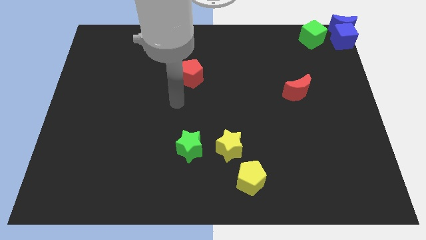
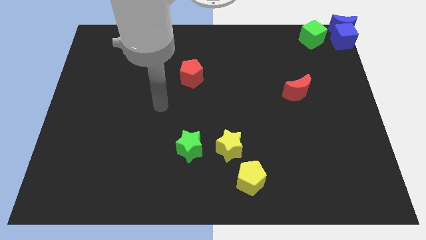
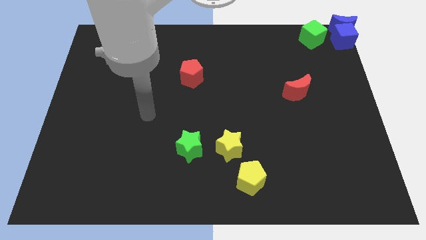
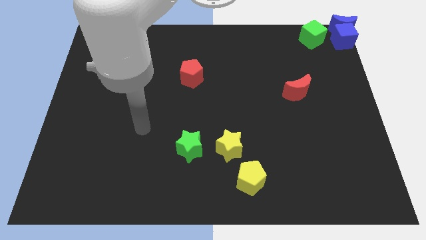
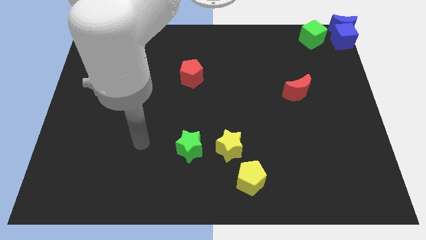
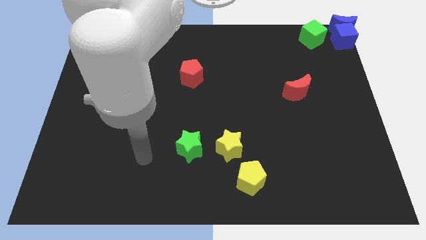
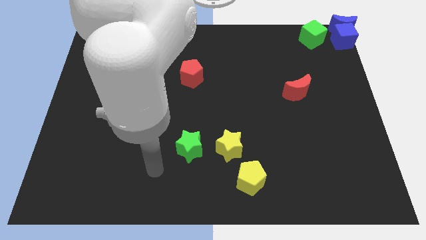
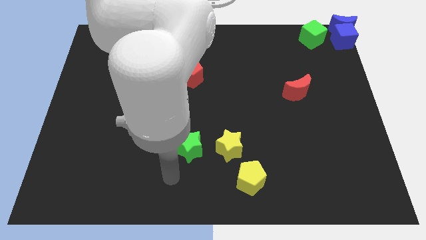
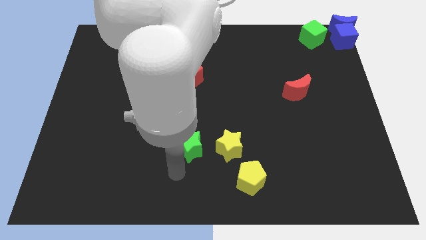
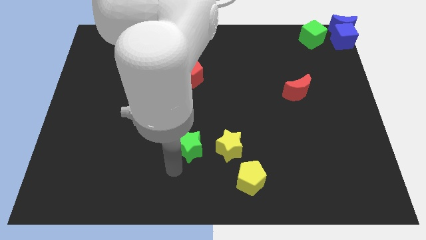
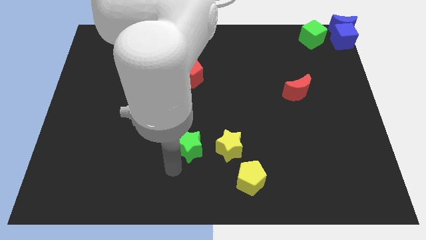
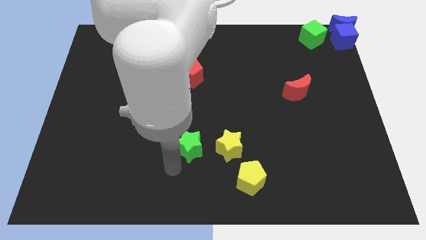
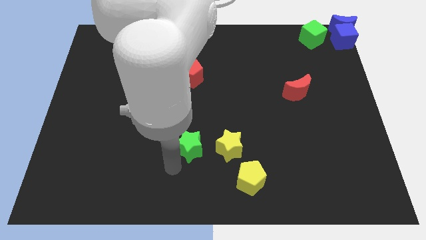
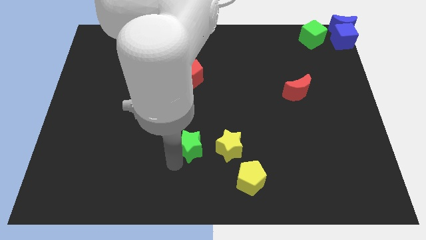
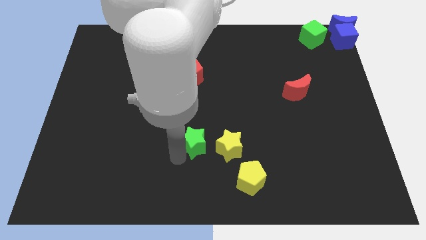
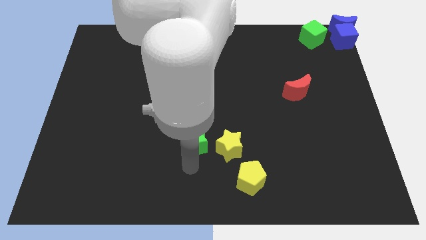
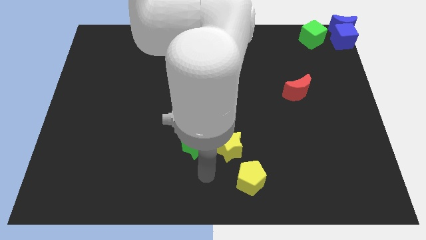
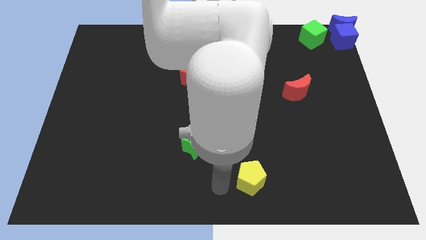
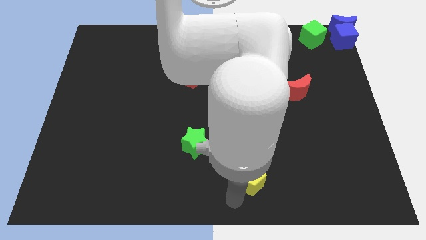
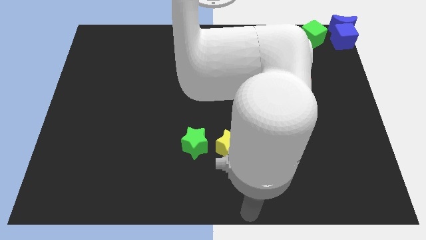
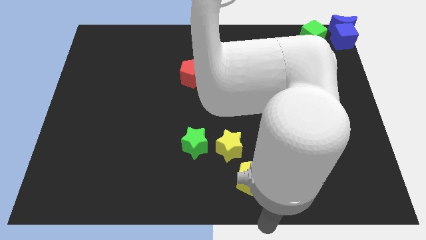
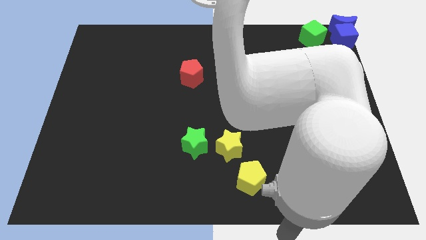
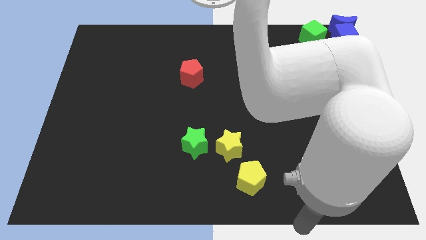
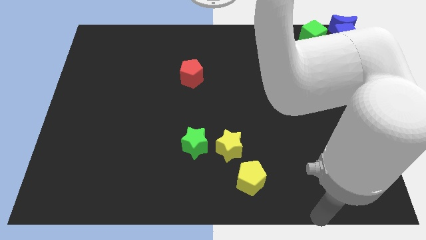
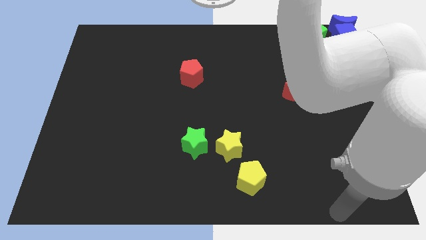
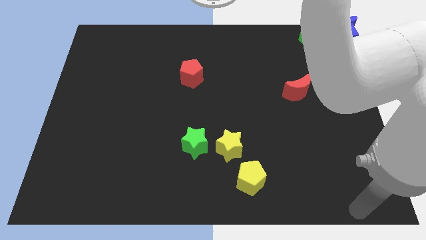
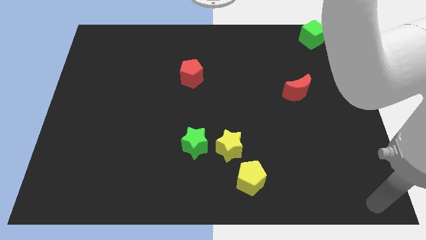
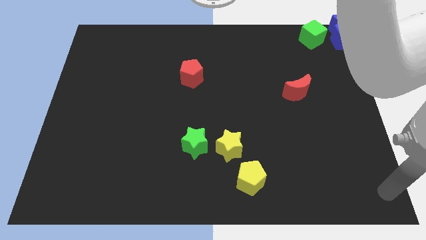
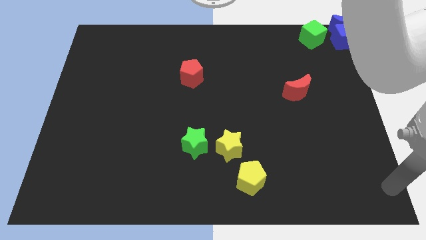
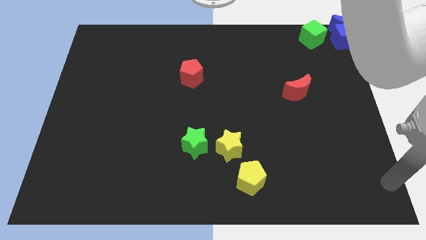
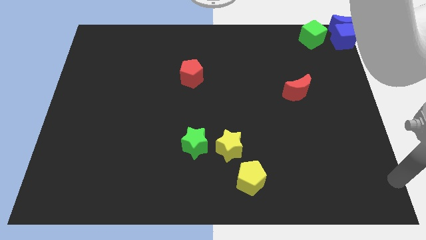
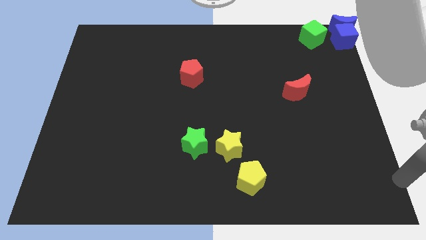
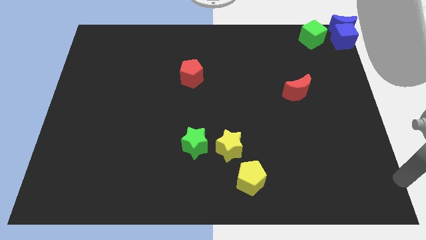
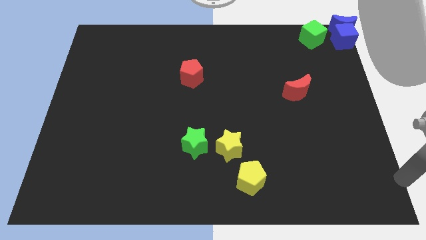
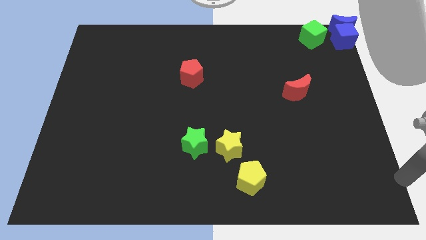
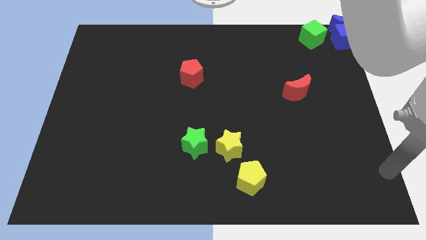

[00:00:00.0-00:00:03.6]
push the green star slightly to the top and move away from it

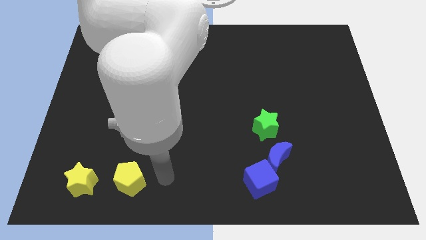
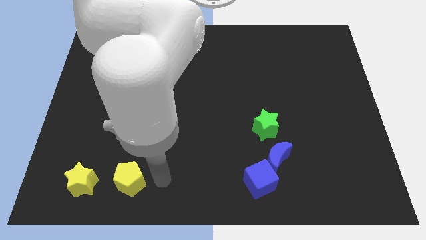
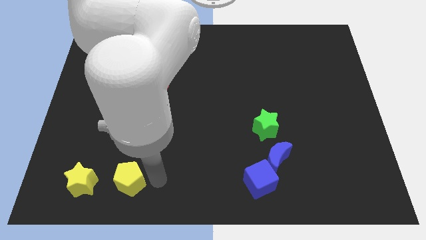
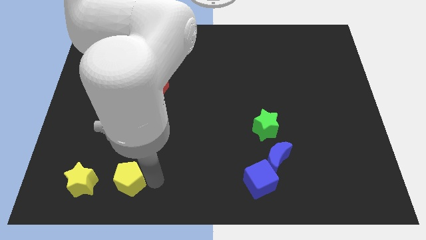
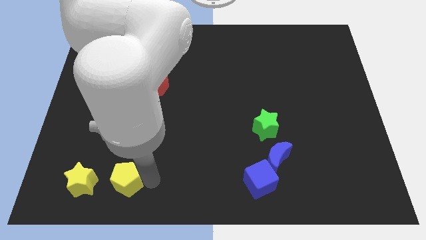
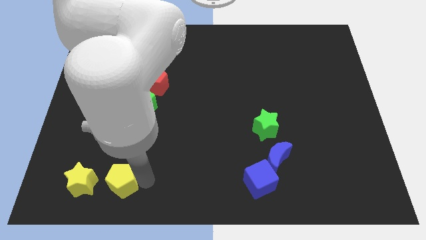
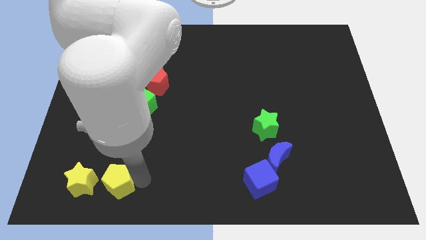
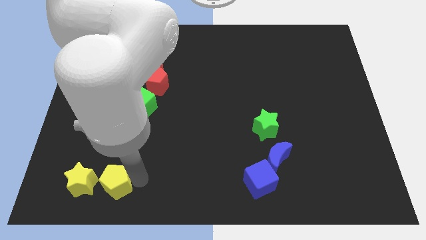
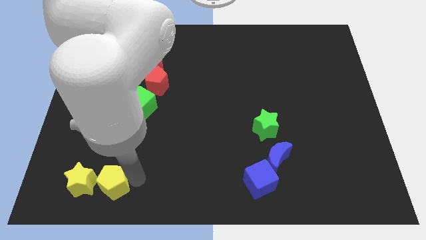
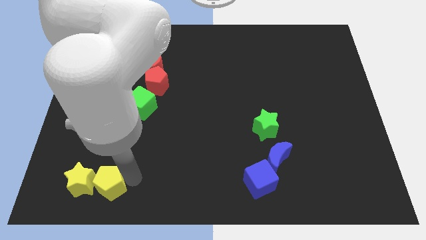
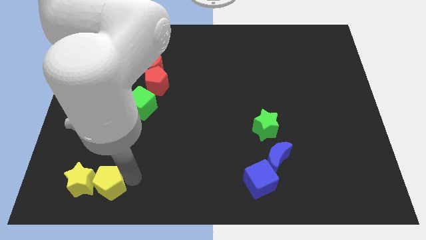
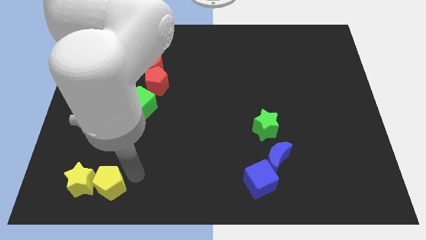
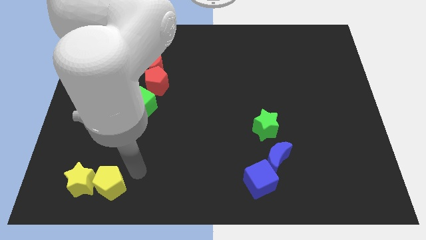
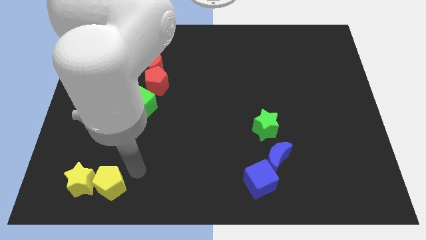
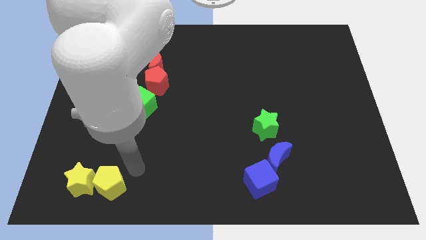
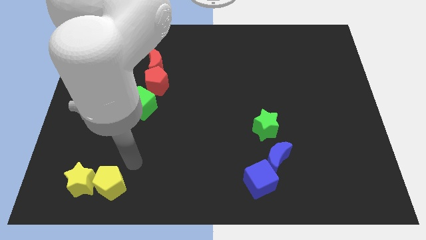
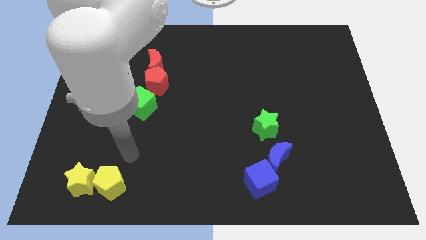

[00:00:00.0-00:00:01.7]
move the yellow pentagon towards the yellow star

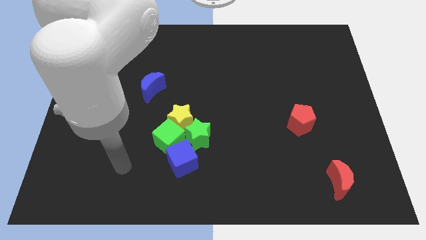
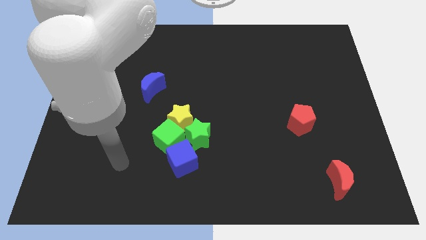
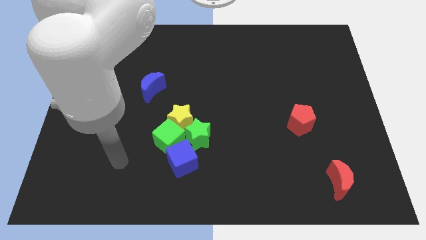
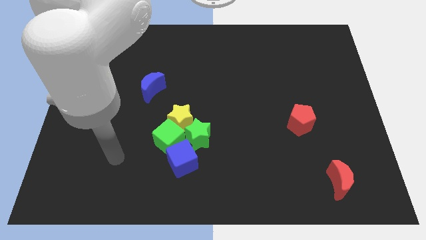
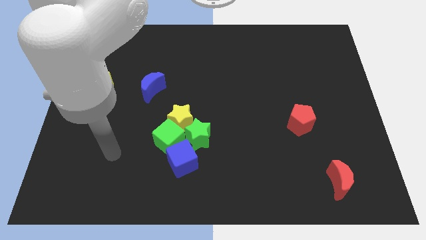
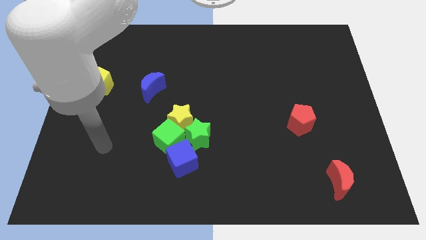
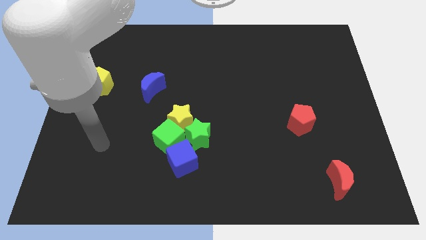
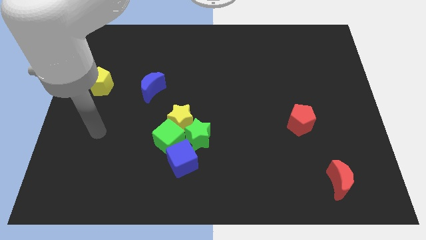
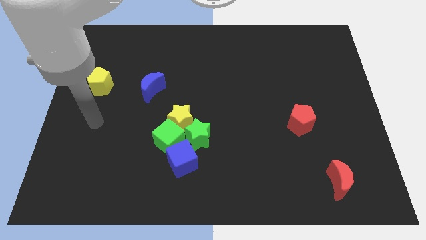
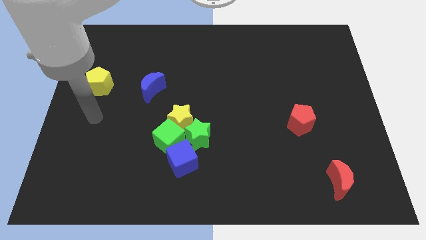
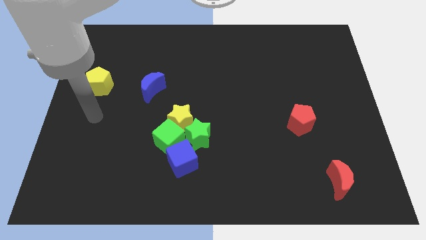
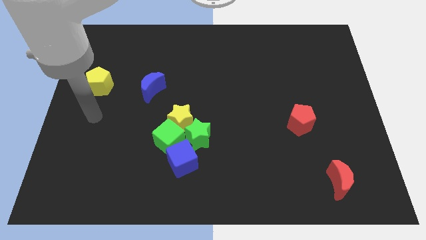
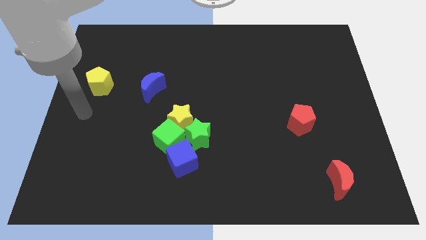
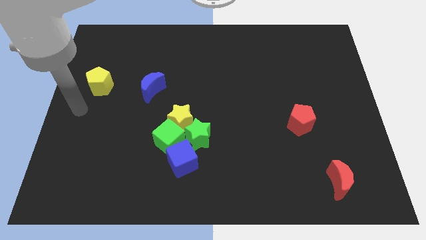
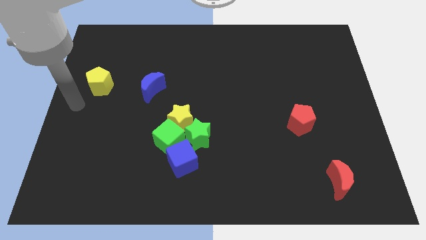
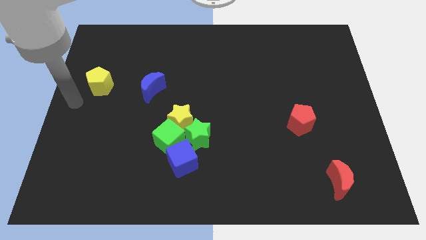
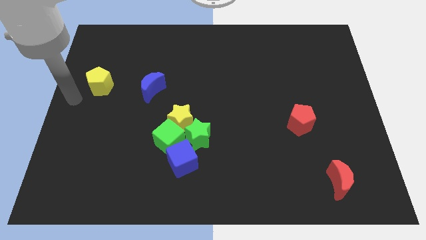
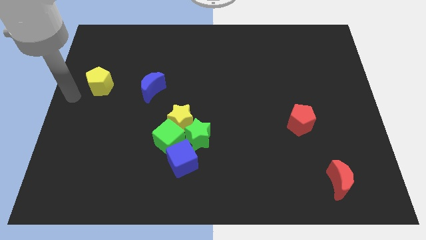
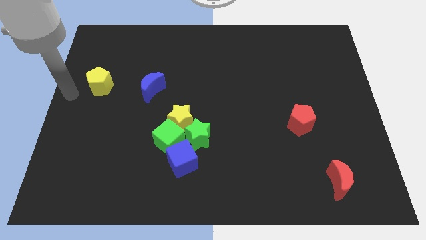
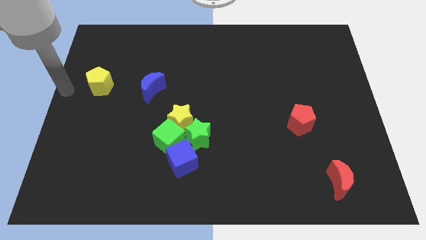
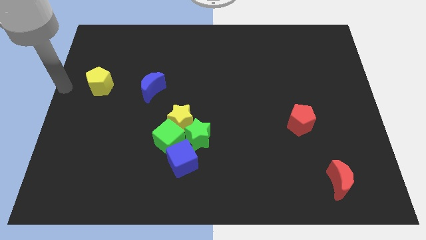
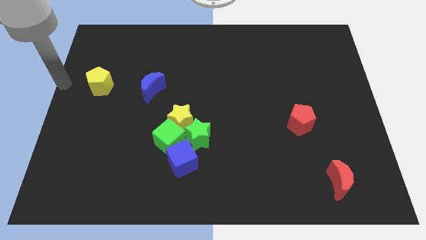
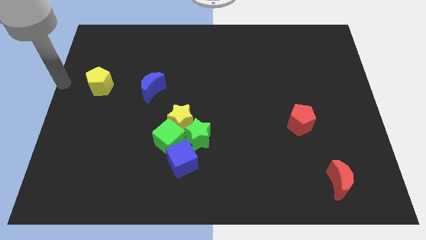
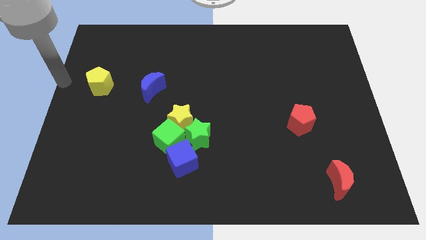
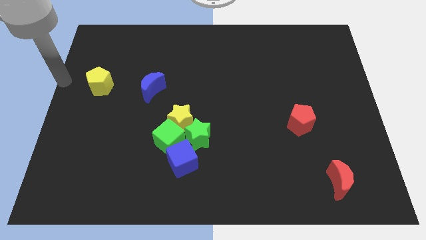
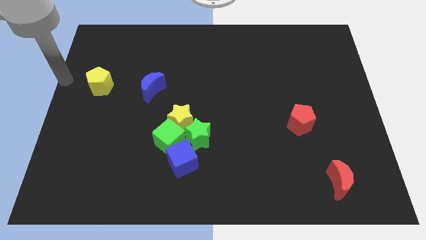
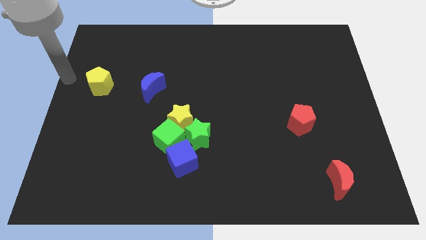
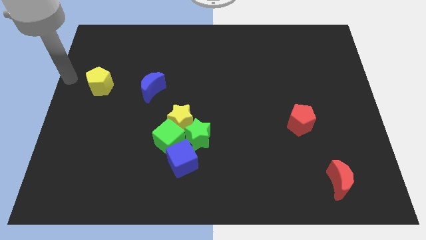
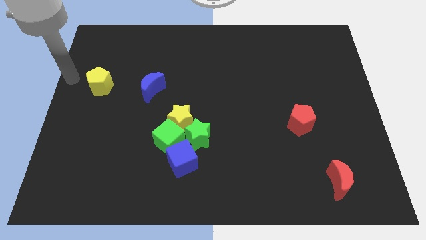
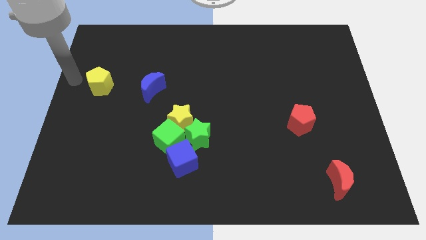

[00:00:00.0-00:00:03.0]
move the arm towards the yellow pentagon

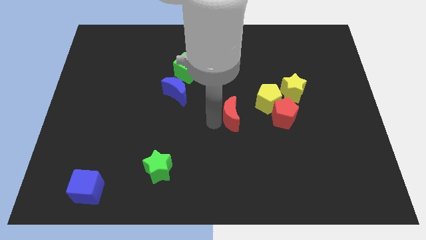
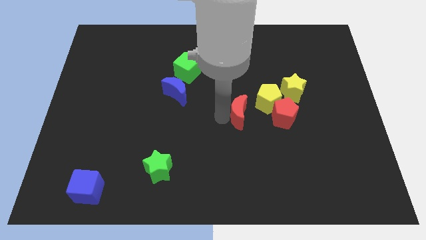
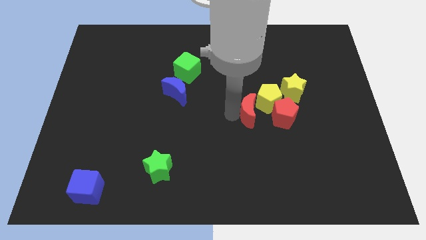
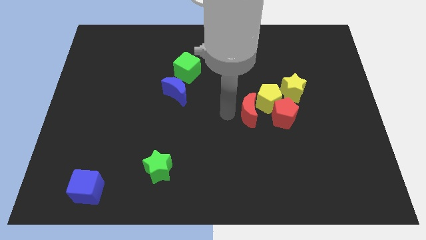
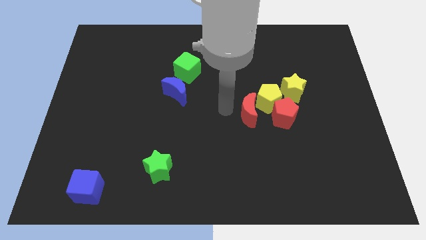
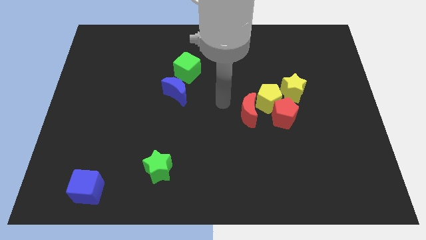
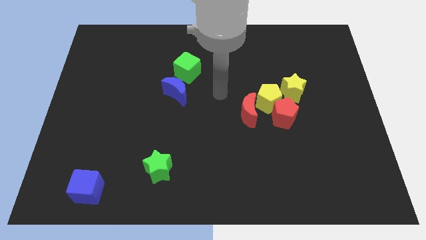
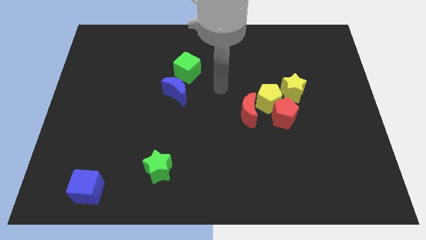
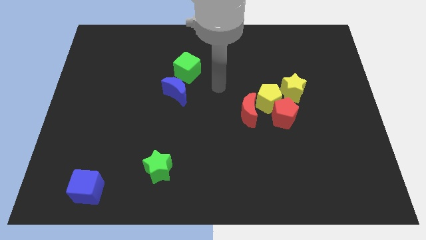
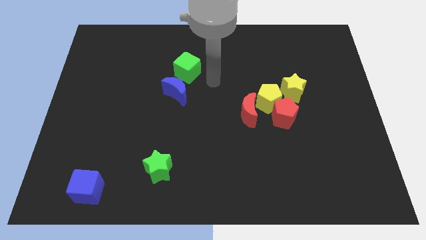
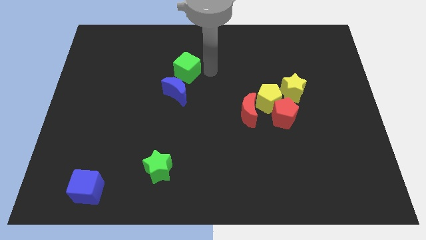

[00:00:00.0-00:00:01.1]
push the red crescent into the yellow pentagon from thee left
